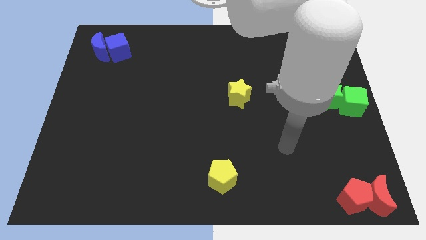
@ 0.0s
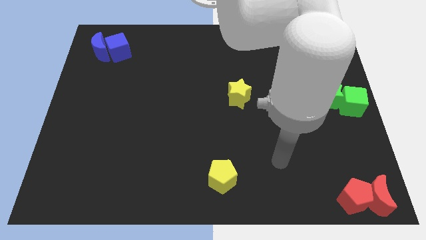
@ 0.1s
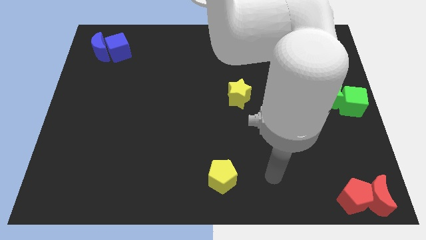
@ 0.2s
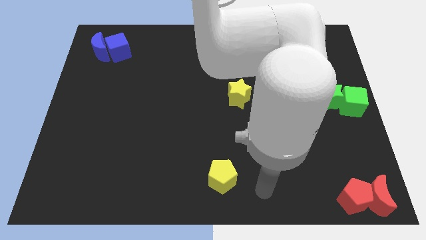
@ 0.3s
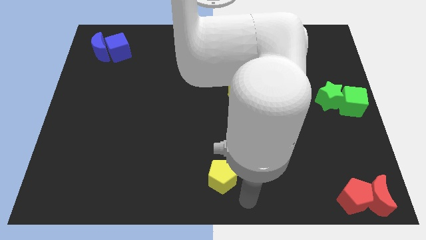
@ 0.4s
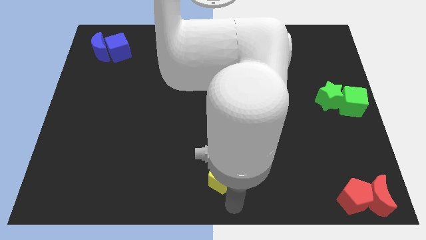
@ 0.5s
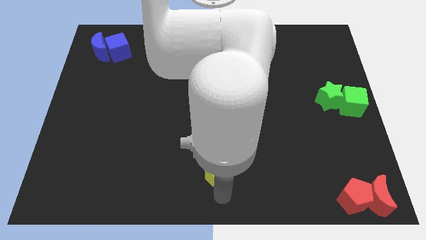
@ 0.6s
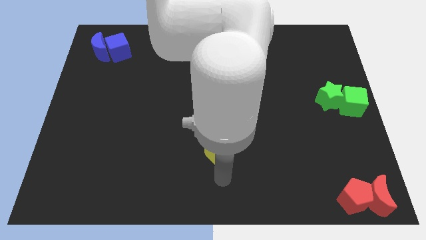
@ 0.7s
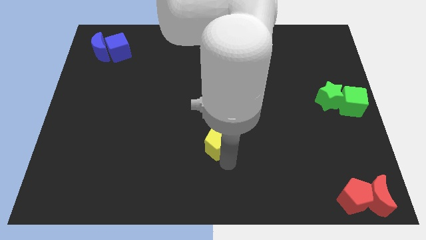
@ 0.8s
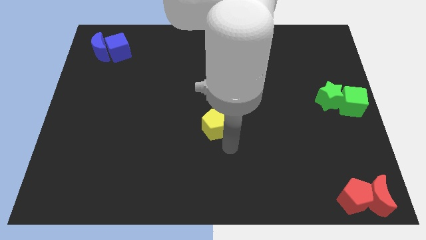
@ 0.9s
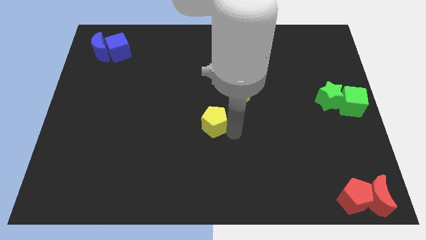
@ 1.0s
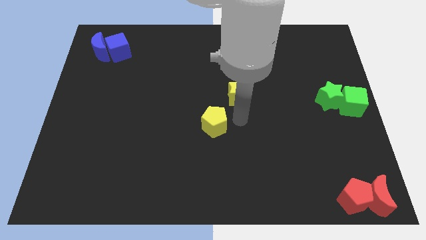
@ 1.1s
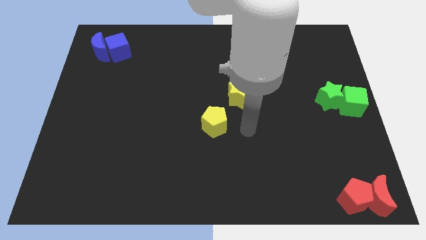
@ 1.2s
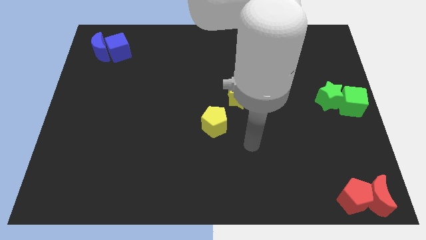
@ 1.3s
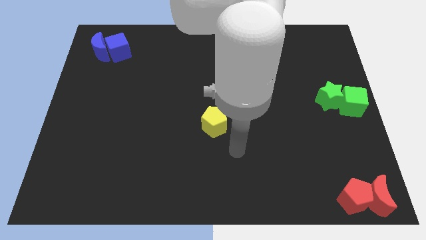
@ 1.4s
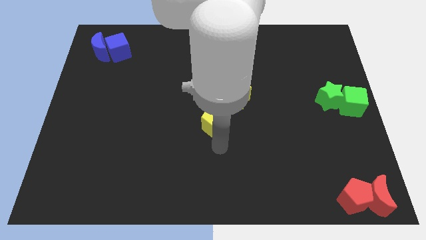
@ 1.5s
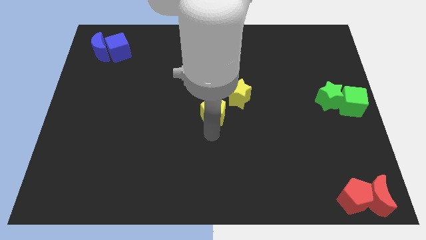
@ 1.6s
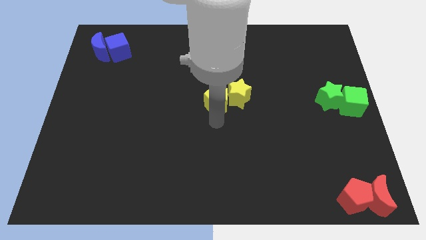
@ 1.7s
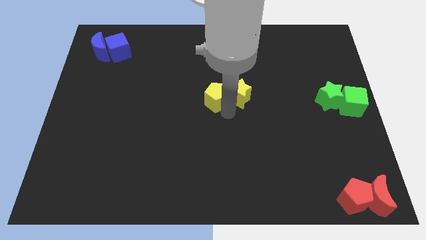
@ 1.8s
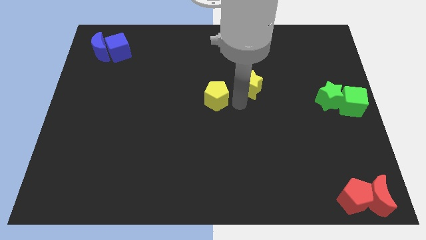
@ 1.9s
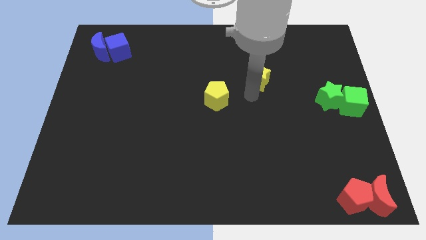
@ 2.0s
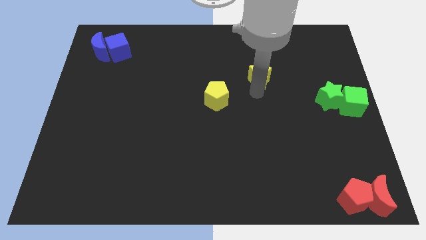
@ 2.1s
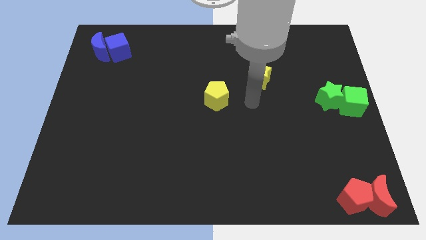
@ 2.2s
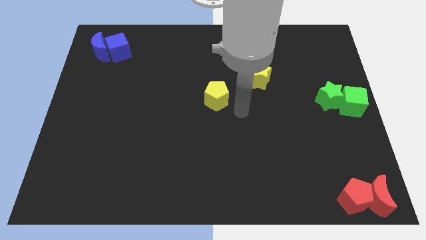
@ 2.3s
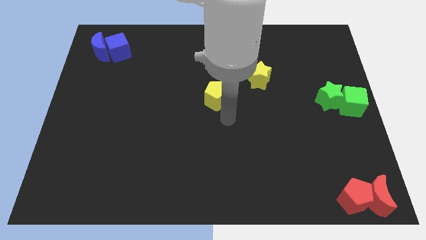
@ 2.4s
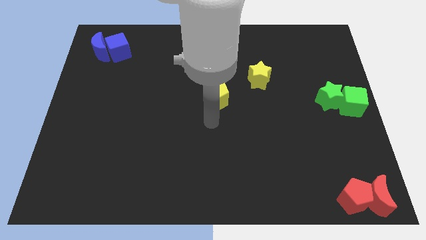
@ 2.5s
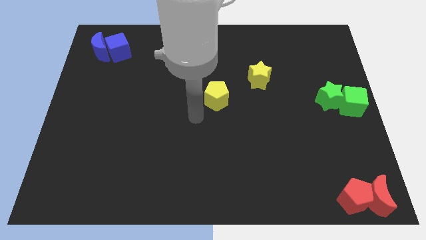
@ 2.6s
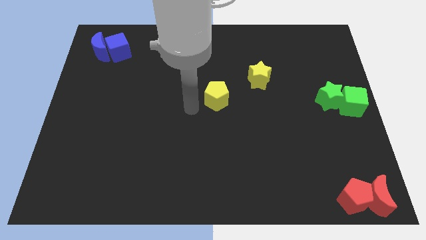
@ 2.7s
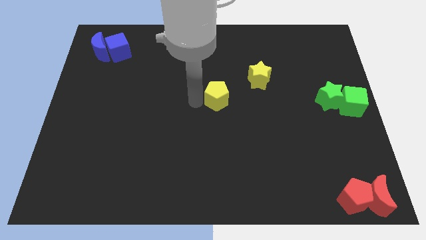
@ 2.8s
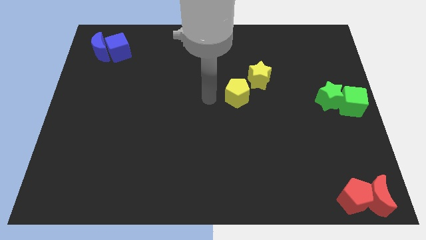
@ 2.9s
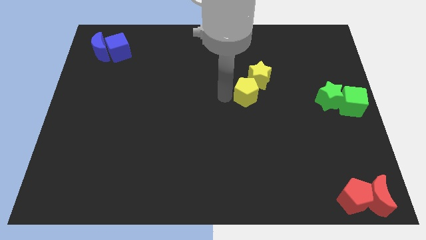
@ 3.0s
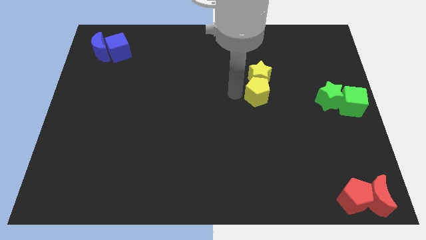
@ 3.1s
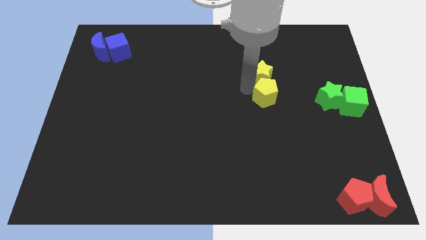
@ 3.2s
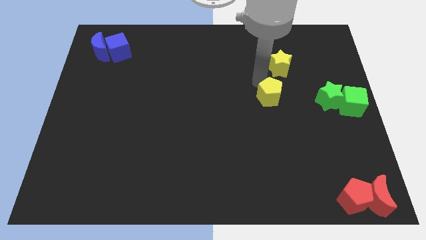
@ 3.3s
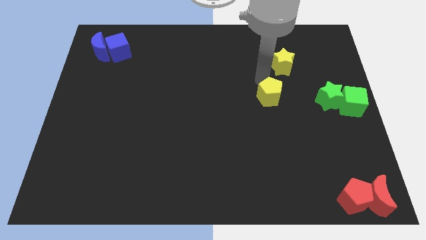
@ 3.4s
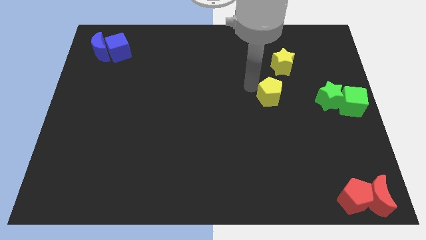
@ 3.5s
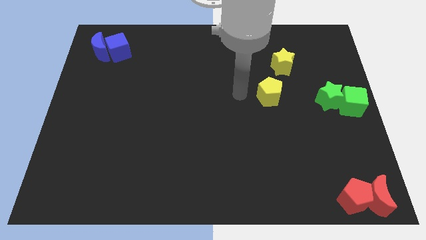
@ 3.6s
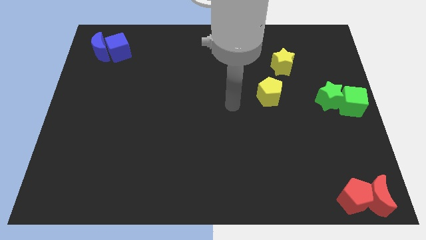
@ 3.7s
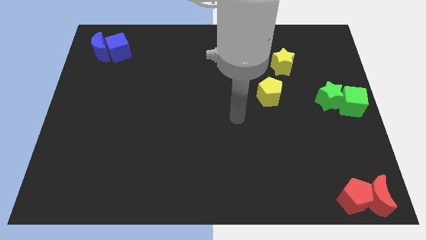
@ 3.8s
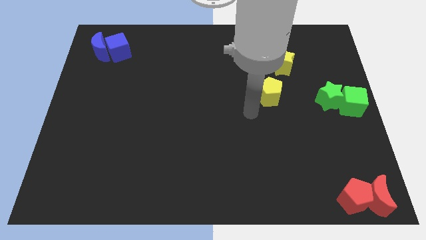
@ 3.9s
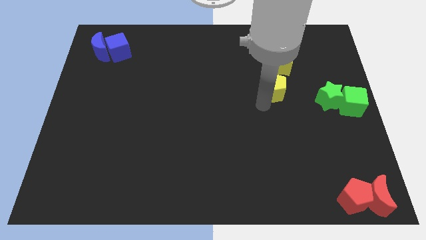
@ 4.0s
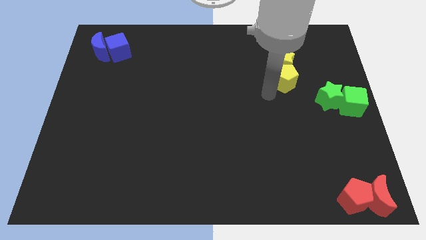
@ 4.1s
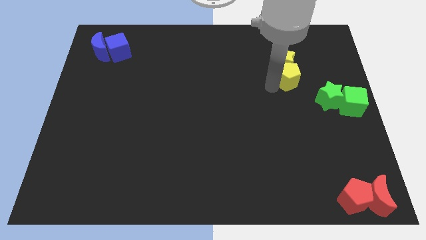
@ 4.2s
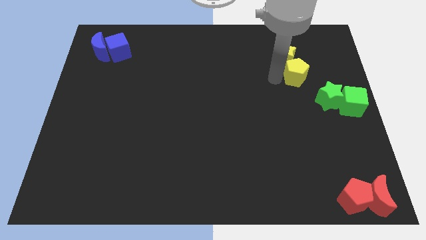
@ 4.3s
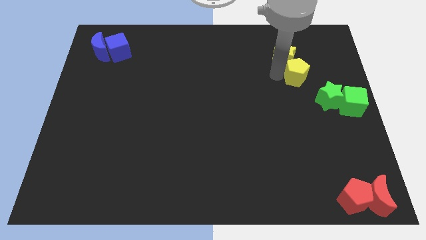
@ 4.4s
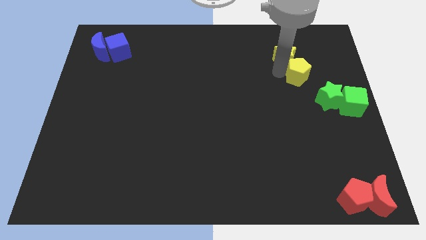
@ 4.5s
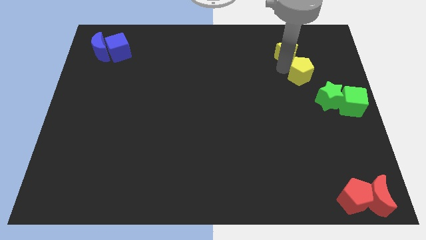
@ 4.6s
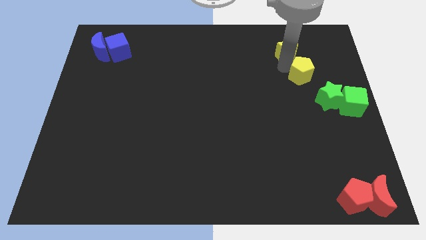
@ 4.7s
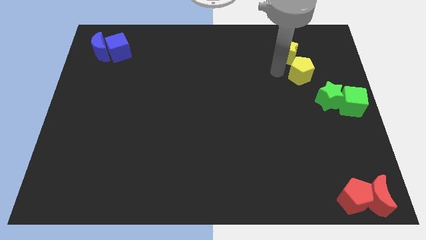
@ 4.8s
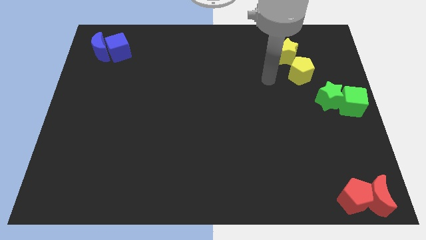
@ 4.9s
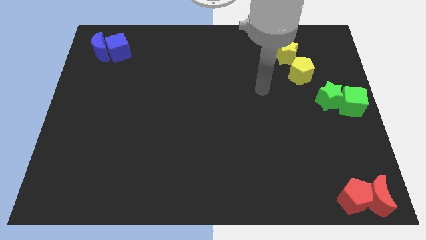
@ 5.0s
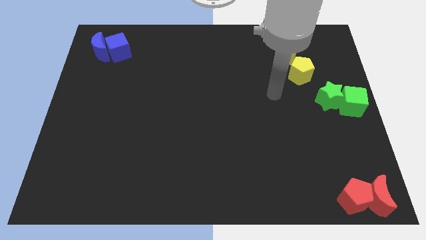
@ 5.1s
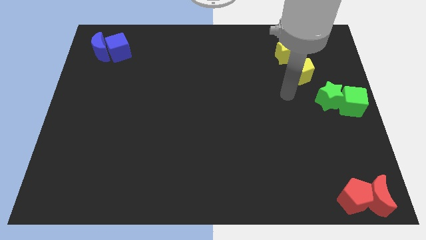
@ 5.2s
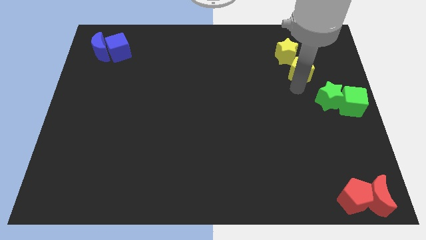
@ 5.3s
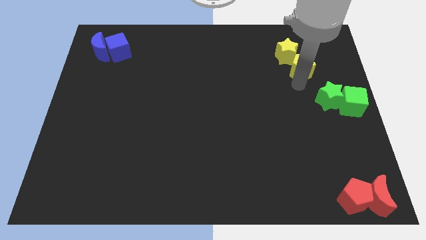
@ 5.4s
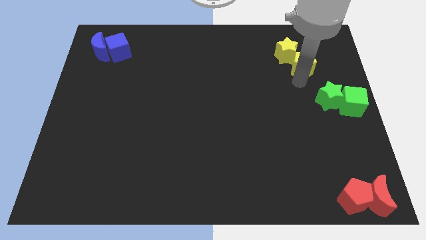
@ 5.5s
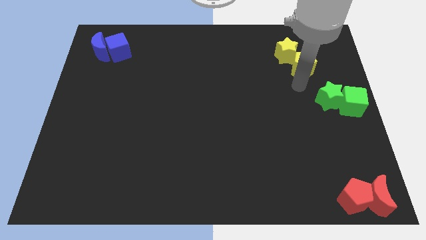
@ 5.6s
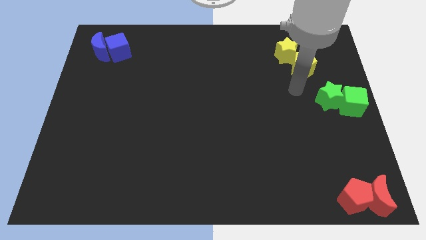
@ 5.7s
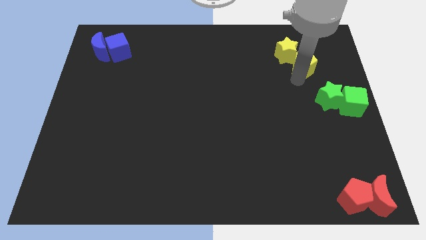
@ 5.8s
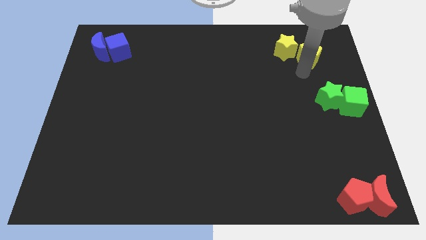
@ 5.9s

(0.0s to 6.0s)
move the yellow blocks to the top right of the board

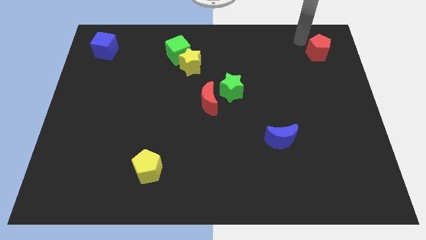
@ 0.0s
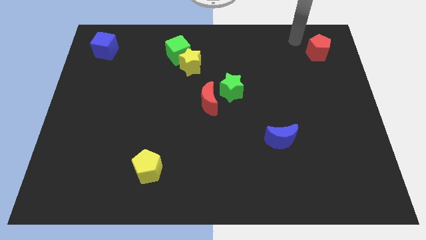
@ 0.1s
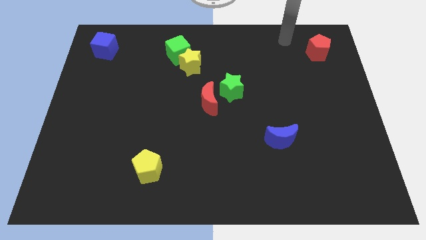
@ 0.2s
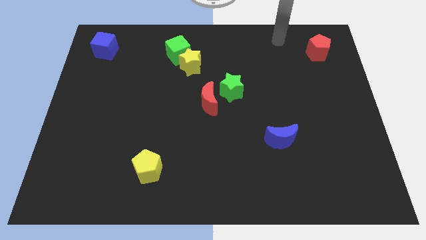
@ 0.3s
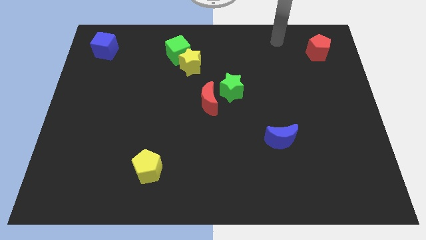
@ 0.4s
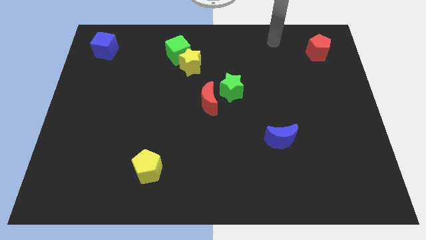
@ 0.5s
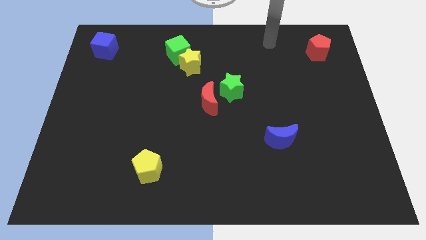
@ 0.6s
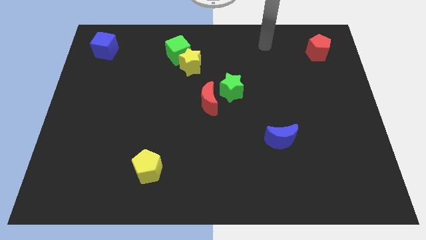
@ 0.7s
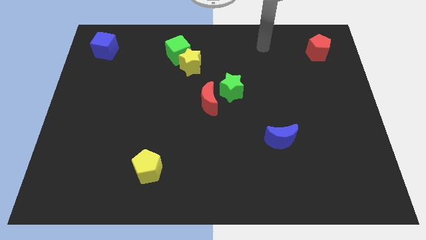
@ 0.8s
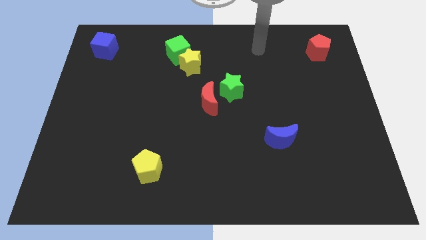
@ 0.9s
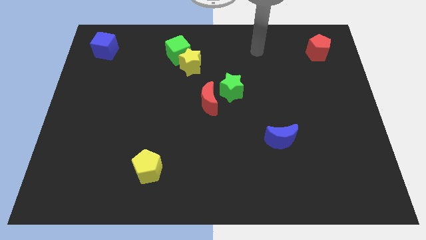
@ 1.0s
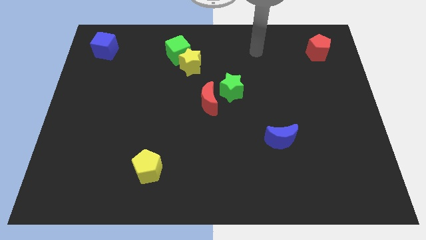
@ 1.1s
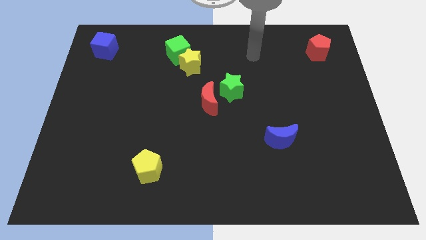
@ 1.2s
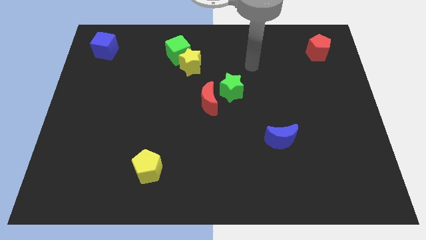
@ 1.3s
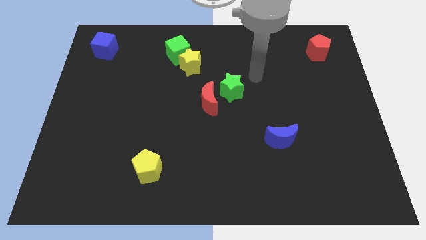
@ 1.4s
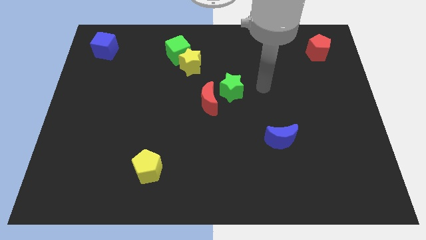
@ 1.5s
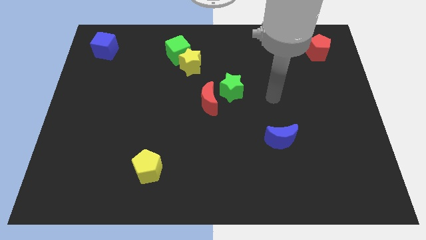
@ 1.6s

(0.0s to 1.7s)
move your arm away from the red pentagon

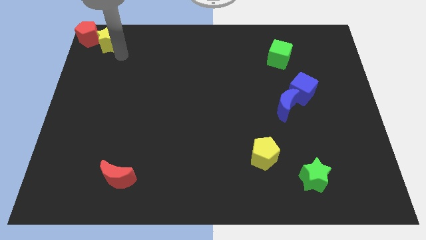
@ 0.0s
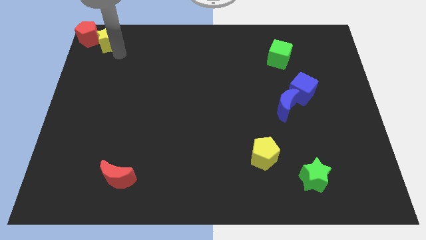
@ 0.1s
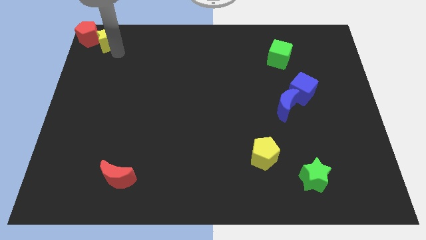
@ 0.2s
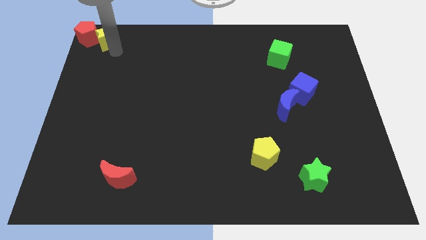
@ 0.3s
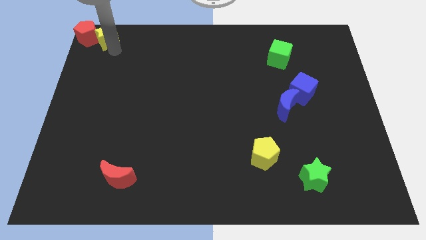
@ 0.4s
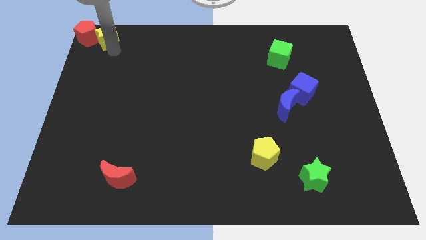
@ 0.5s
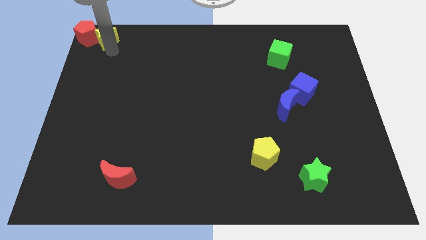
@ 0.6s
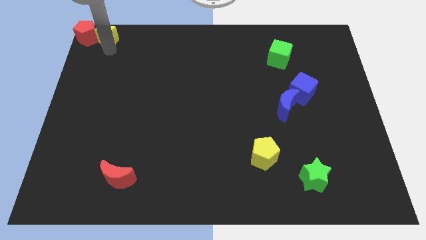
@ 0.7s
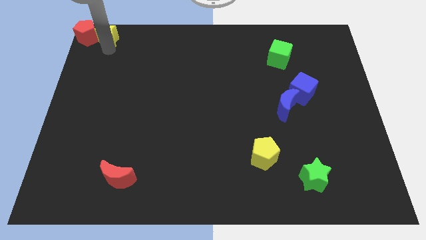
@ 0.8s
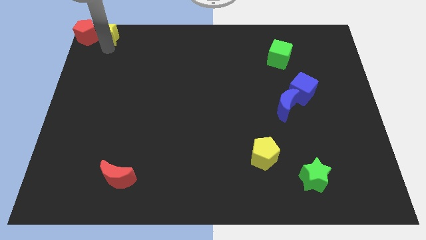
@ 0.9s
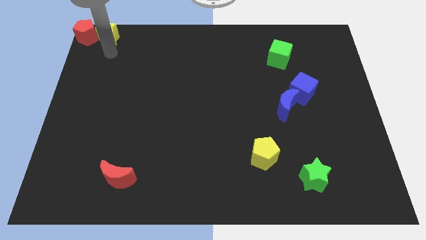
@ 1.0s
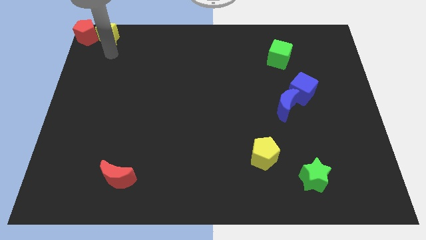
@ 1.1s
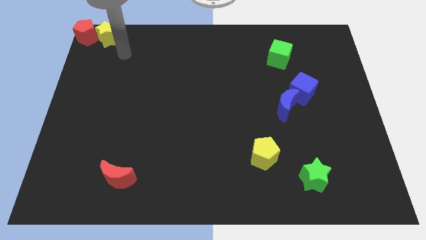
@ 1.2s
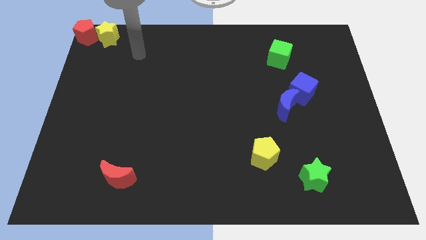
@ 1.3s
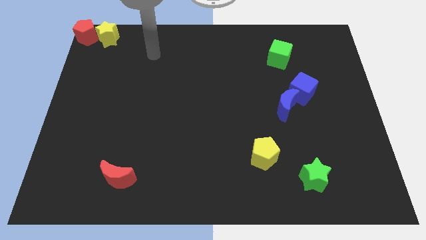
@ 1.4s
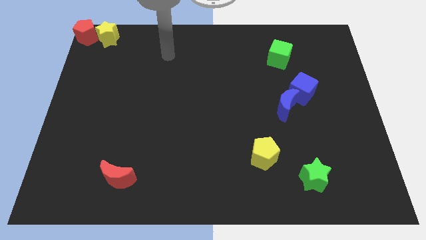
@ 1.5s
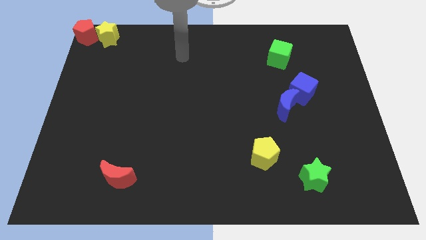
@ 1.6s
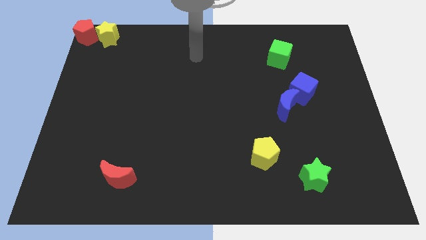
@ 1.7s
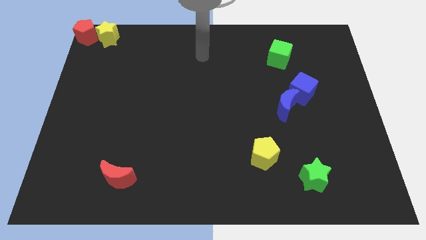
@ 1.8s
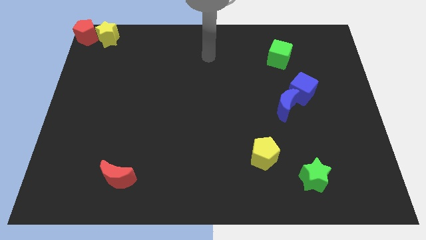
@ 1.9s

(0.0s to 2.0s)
move the arm away from the yellow star
